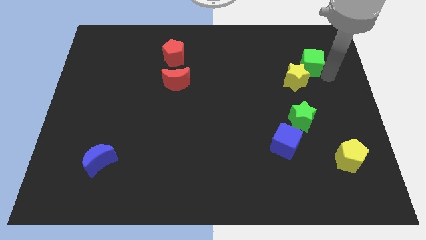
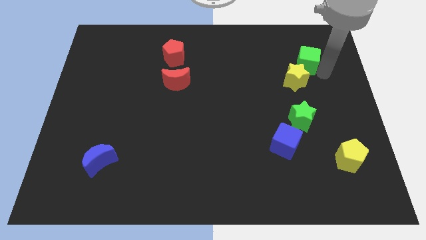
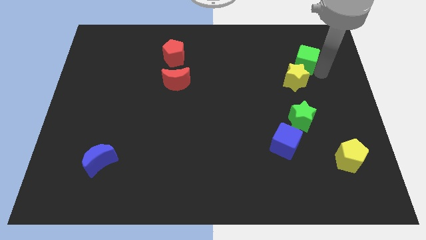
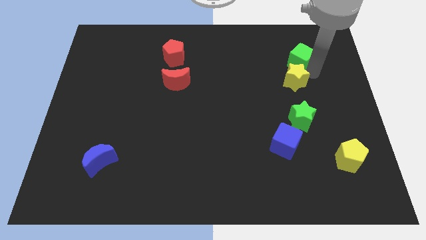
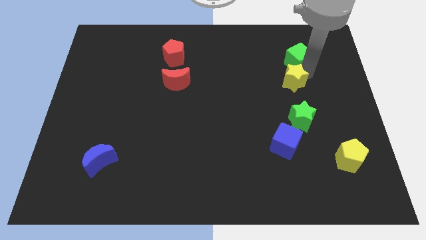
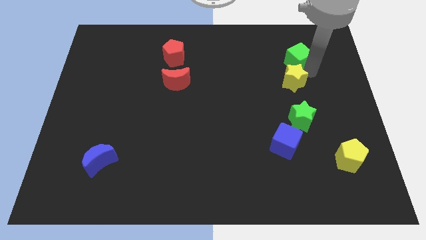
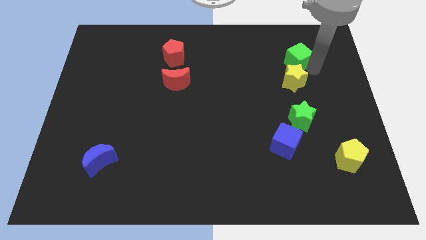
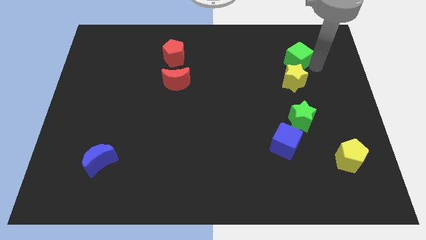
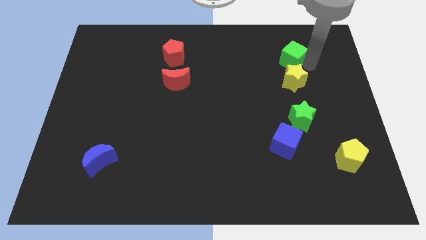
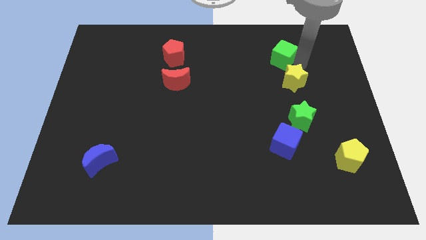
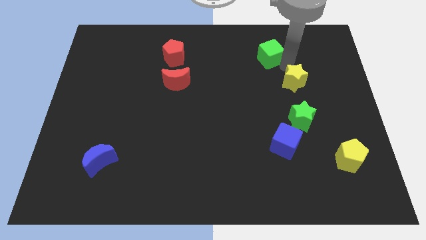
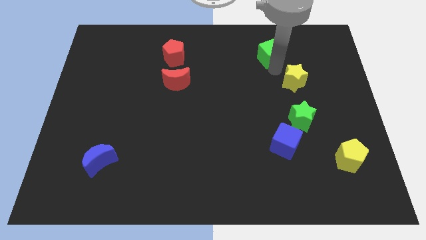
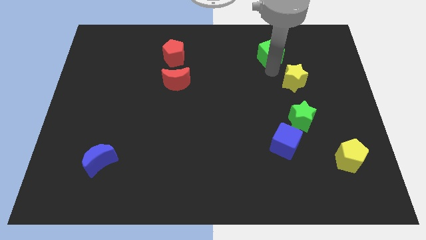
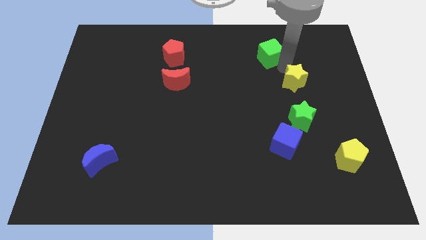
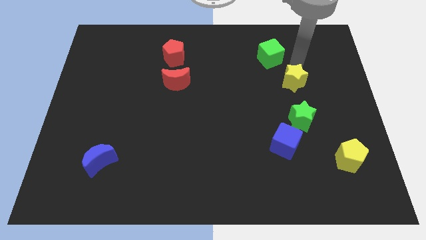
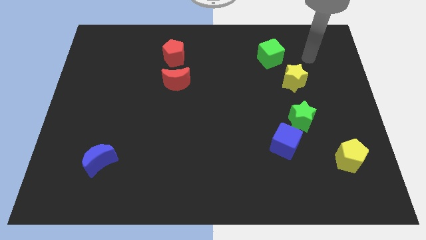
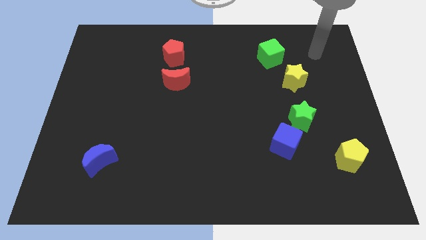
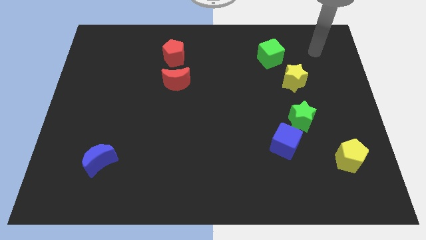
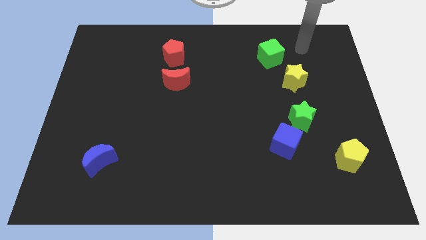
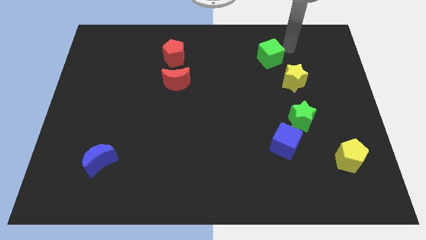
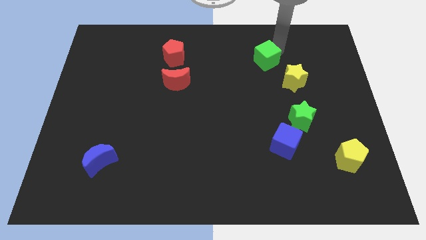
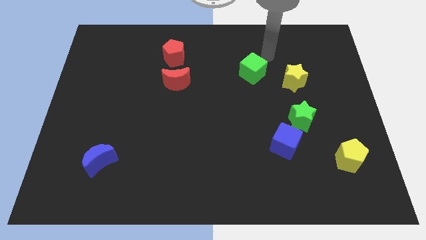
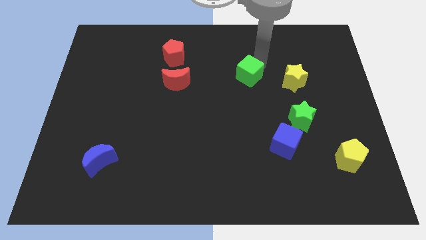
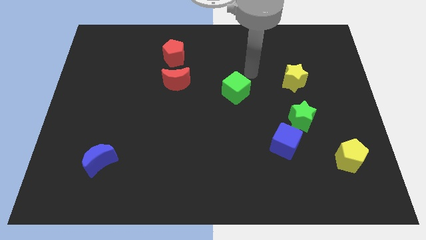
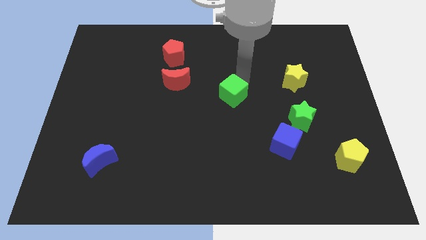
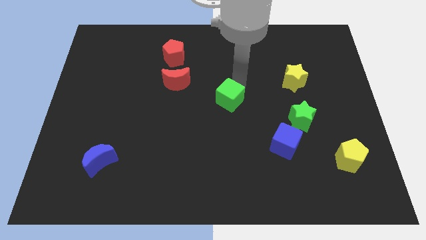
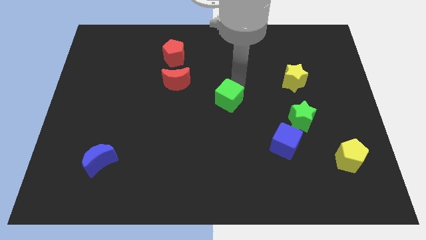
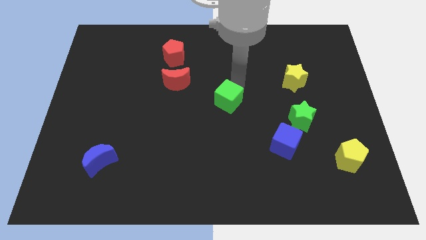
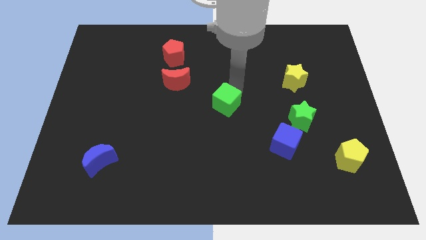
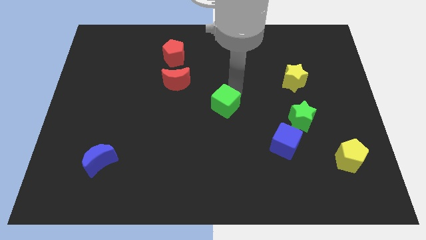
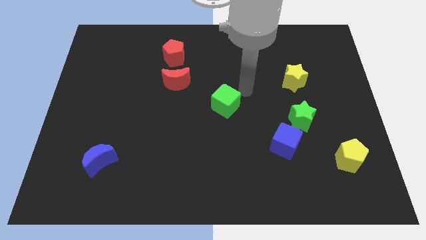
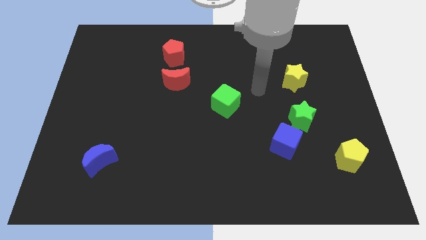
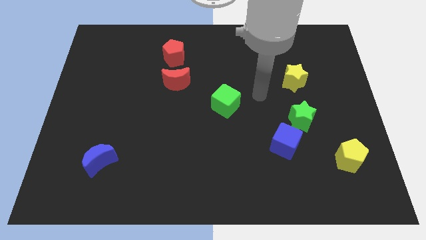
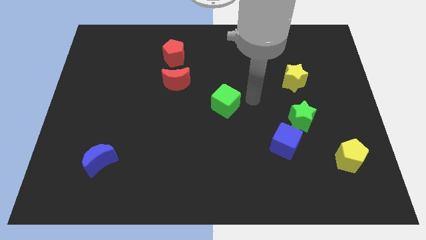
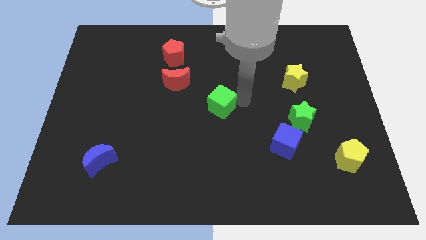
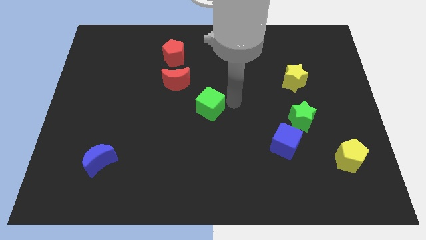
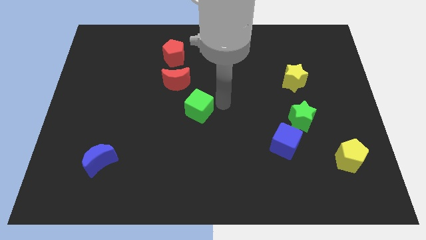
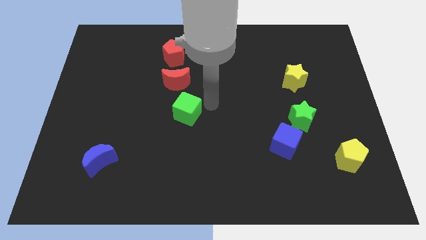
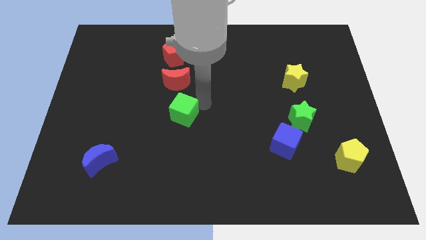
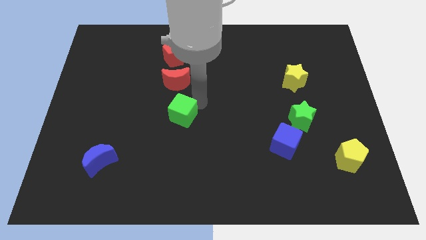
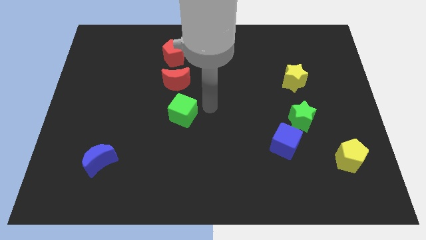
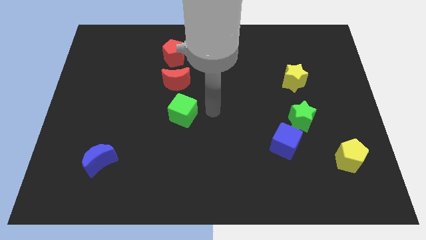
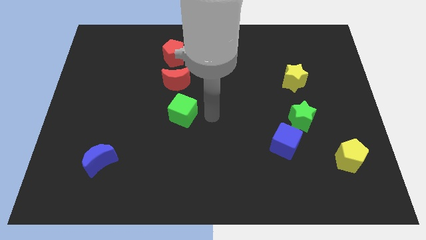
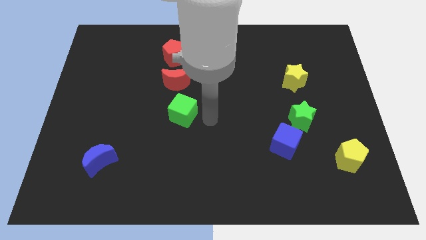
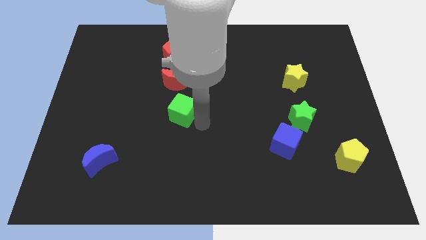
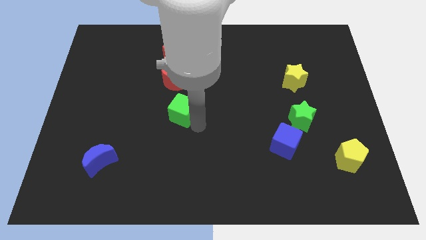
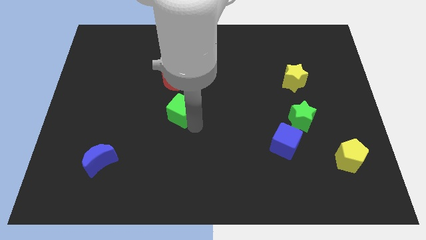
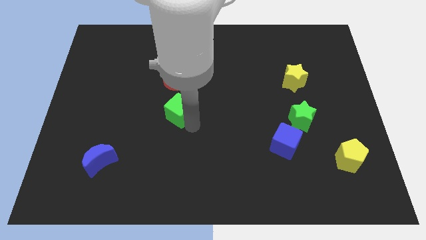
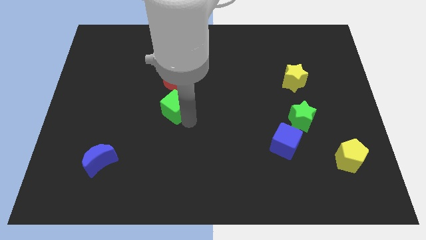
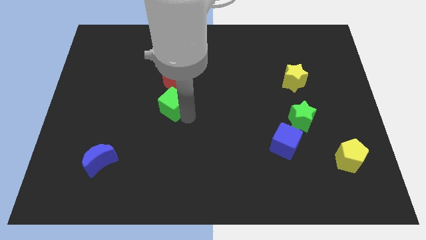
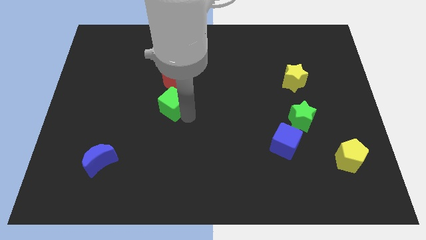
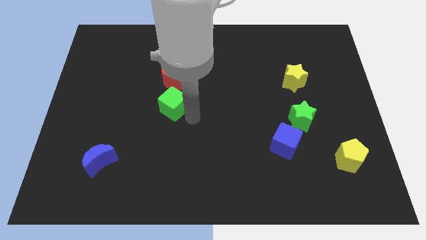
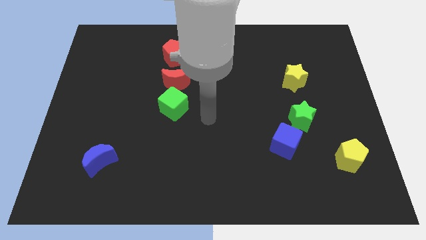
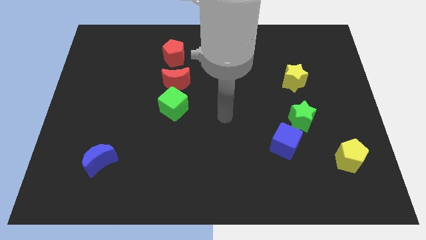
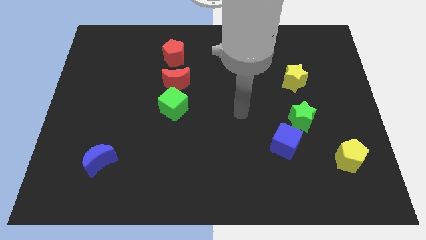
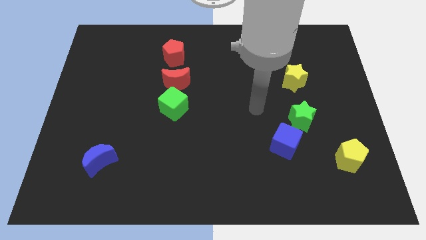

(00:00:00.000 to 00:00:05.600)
slide the green cube below the red moon

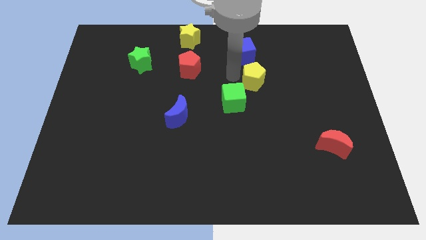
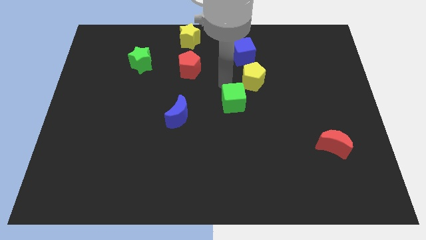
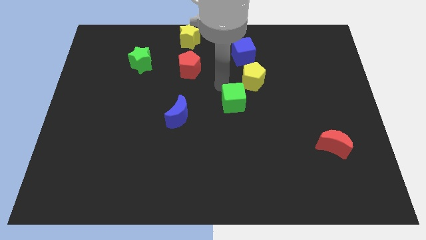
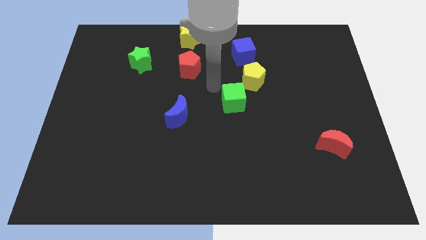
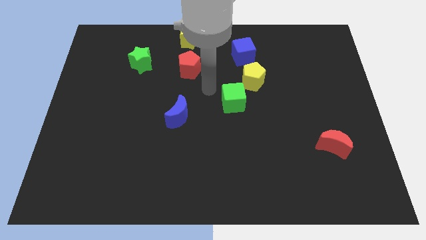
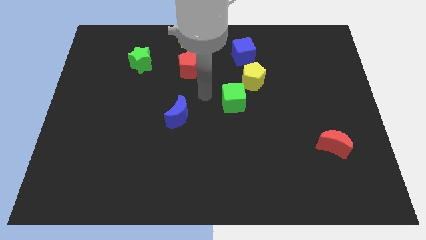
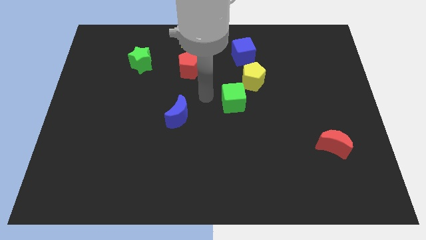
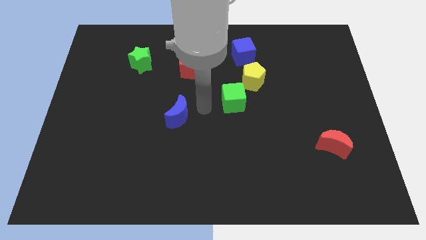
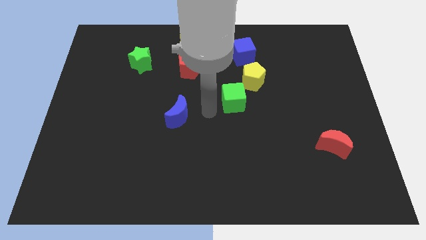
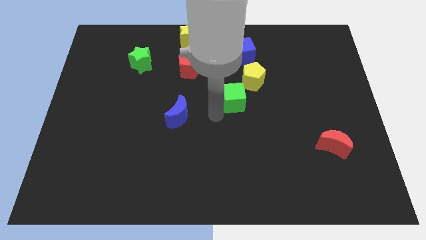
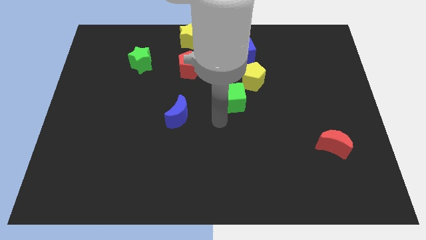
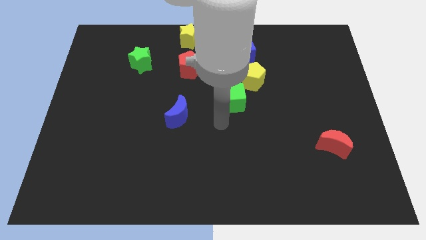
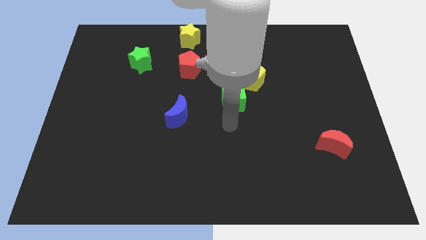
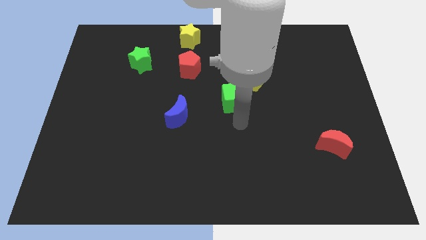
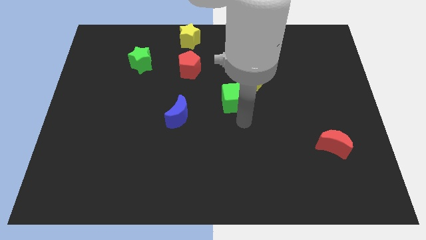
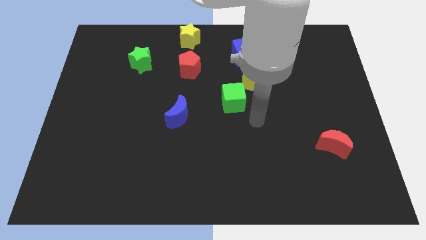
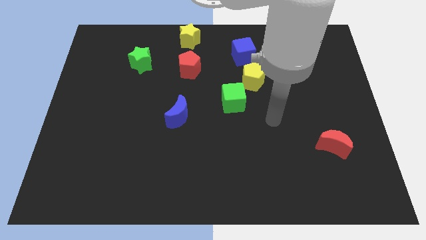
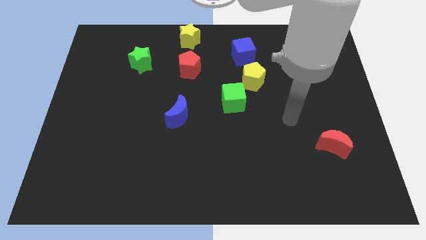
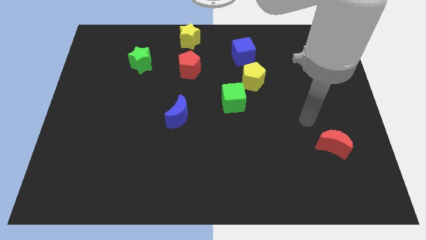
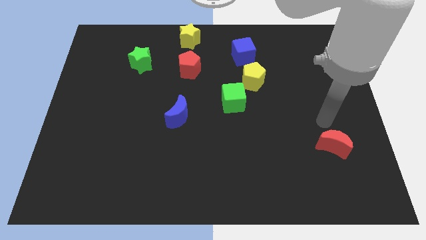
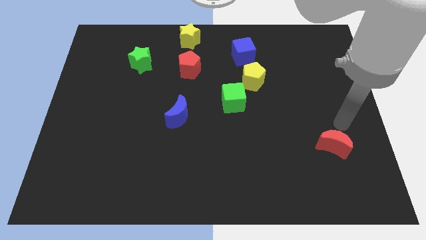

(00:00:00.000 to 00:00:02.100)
move your hand away from the green cube

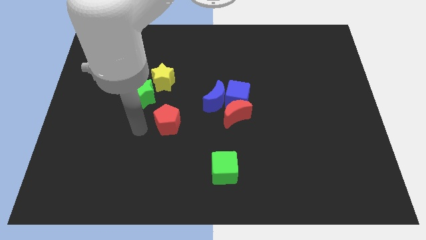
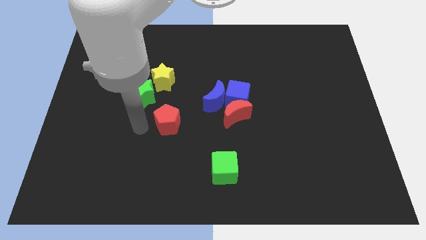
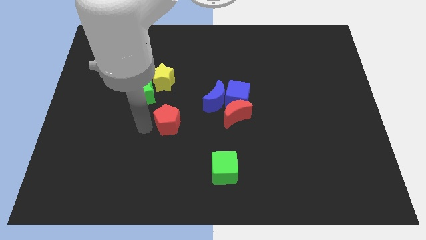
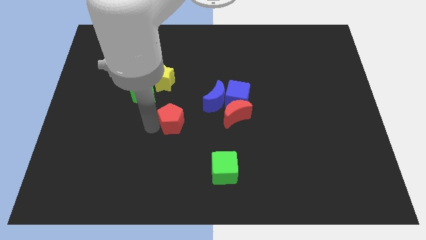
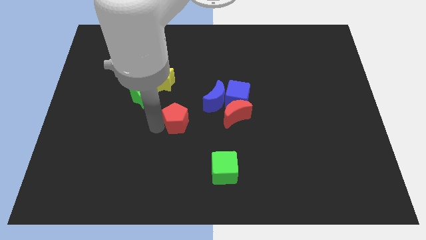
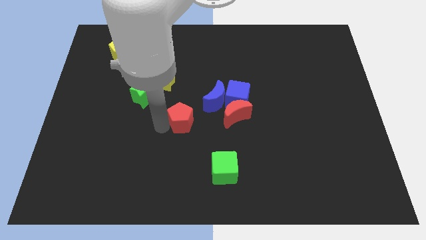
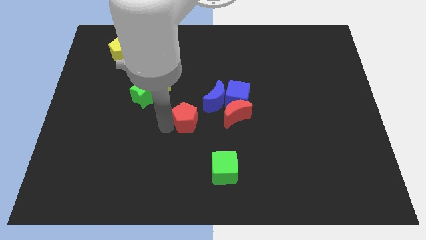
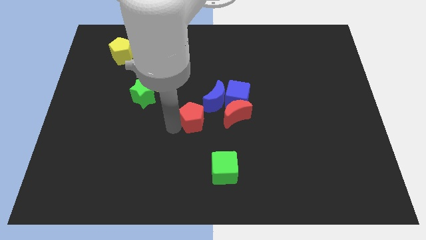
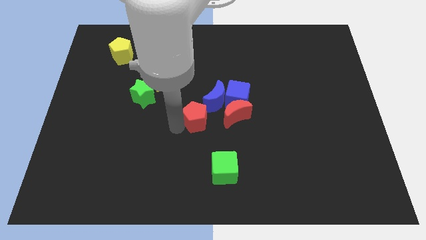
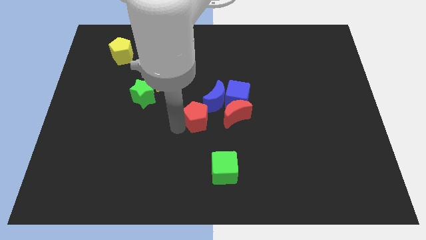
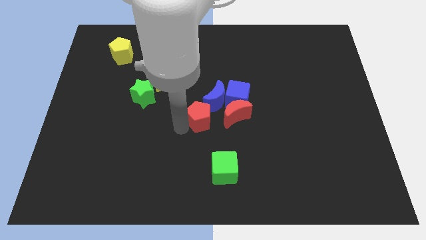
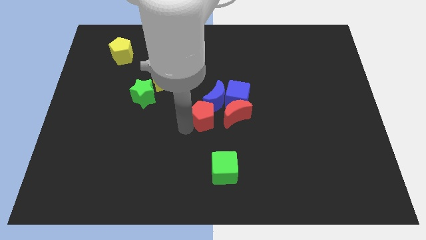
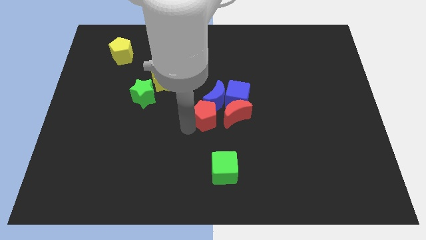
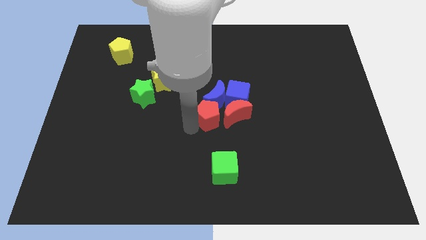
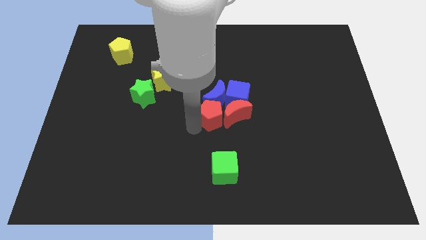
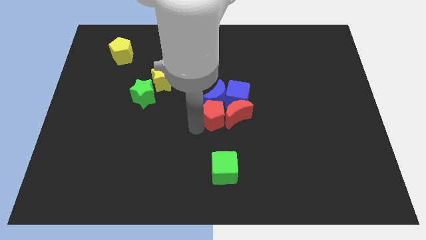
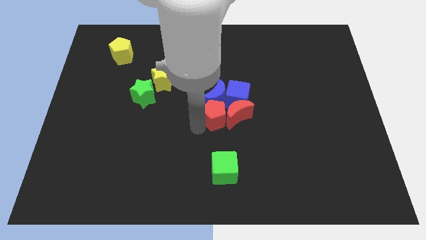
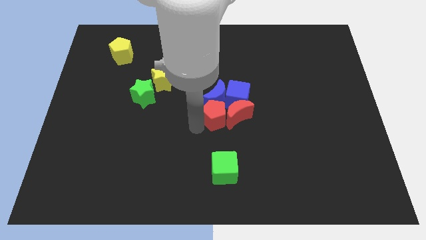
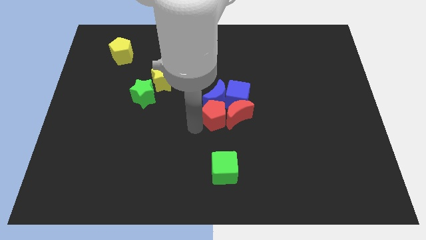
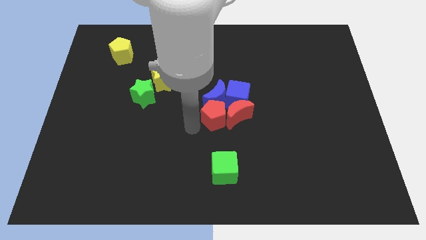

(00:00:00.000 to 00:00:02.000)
move the red pentagon into the red crescent
